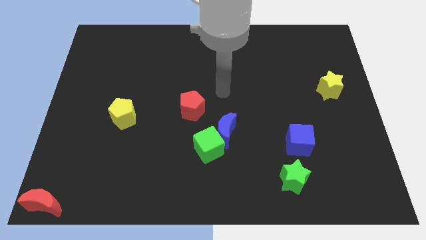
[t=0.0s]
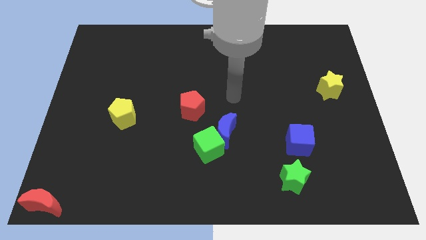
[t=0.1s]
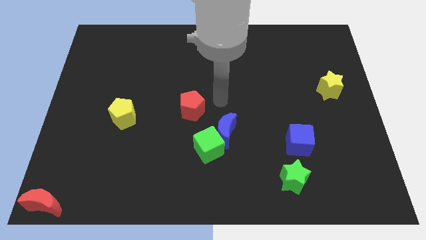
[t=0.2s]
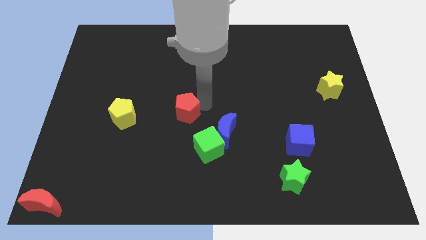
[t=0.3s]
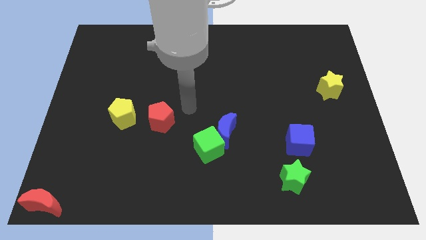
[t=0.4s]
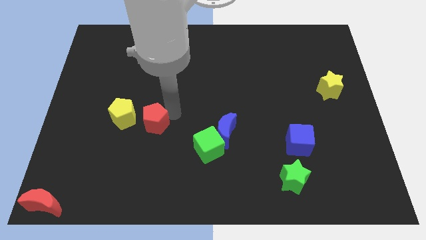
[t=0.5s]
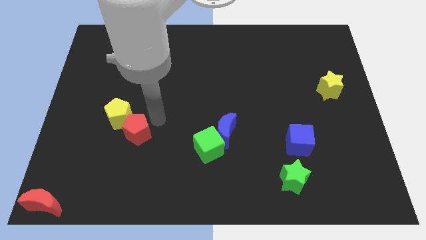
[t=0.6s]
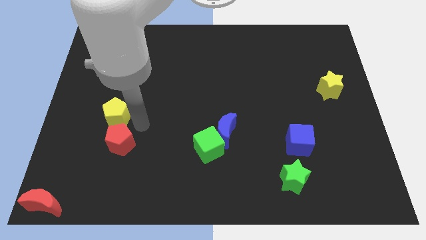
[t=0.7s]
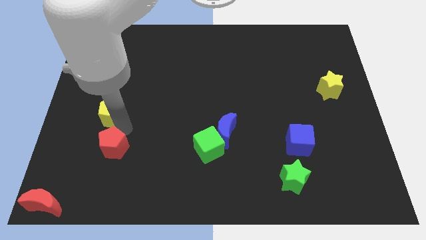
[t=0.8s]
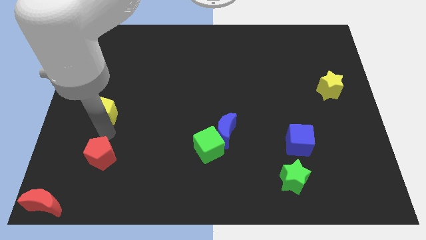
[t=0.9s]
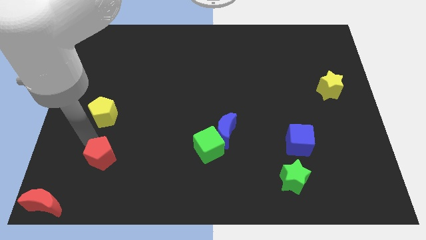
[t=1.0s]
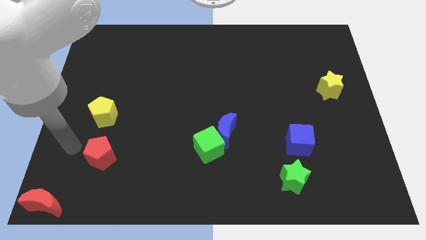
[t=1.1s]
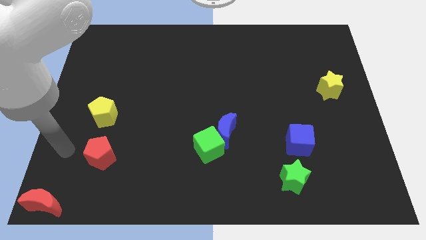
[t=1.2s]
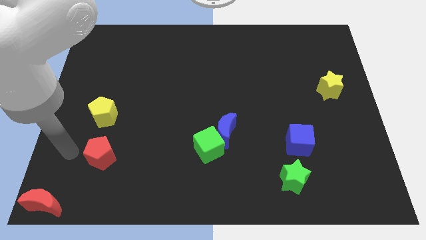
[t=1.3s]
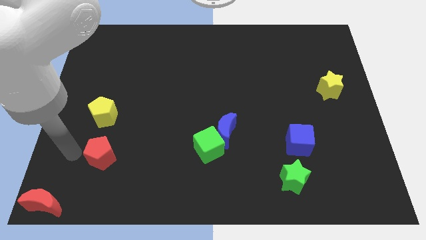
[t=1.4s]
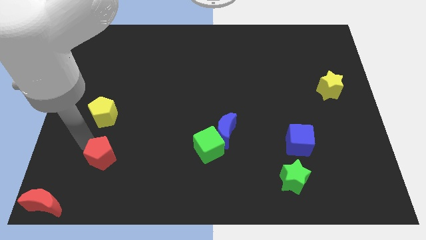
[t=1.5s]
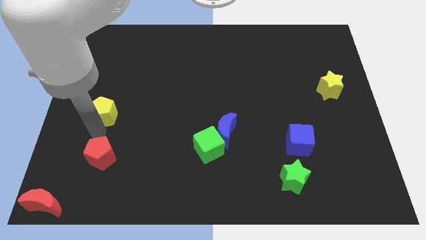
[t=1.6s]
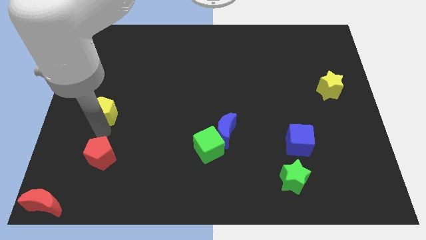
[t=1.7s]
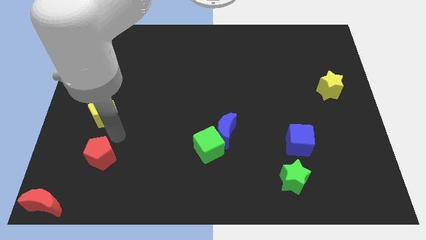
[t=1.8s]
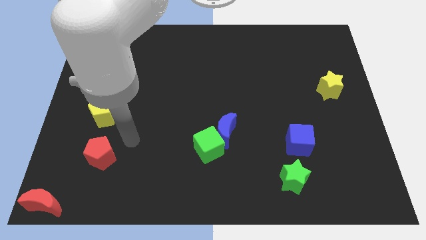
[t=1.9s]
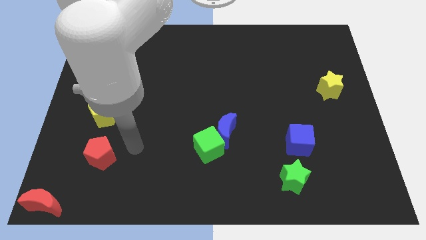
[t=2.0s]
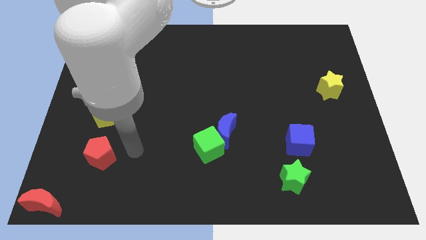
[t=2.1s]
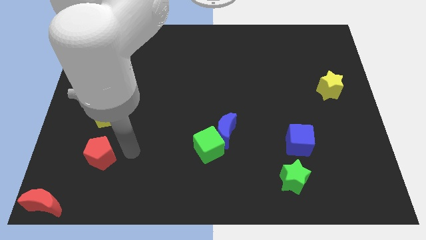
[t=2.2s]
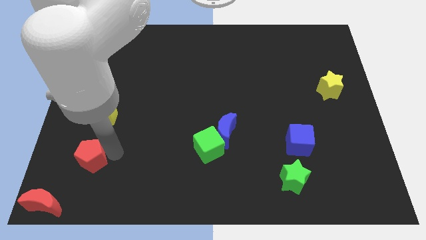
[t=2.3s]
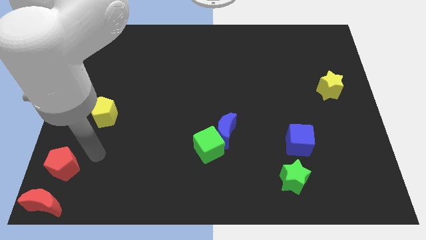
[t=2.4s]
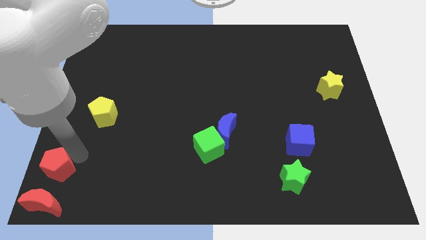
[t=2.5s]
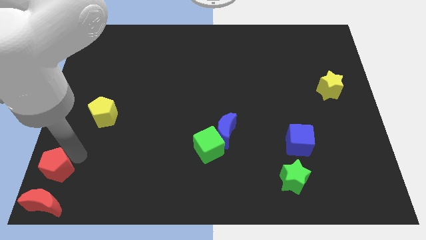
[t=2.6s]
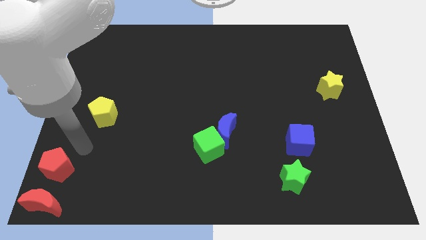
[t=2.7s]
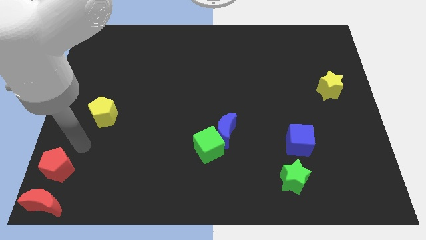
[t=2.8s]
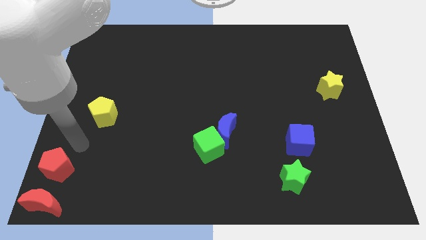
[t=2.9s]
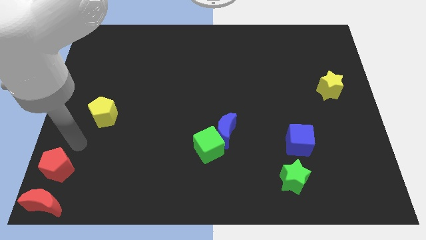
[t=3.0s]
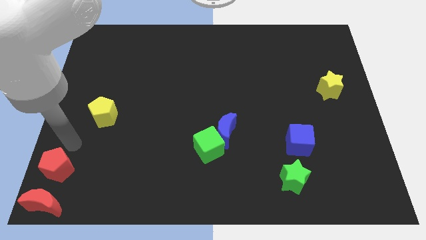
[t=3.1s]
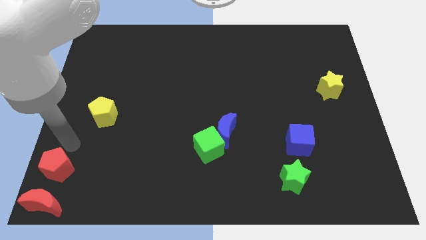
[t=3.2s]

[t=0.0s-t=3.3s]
put the red pentagon vertically above the red moon

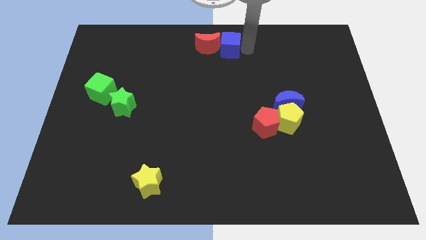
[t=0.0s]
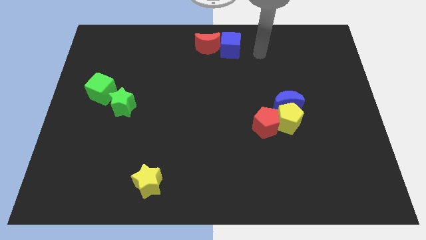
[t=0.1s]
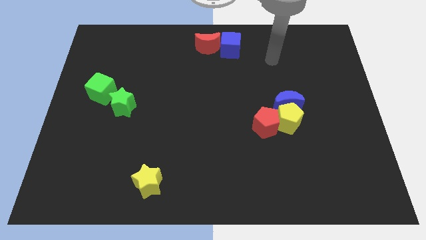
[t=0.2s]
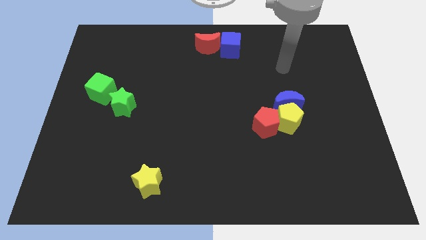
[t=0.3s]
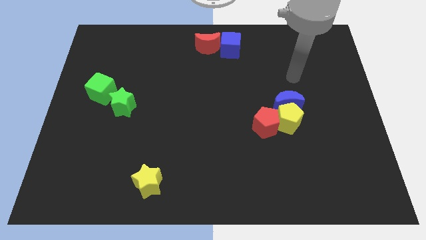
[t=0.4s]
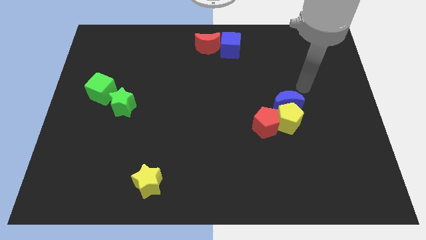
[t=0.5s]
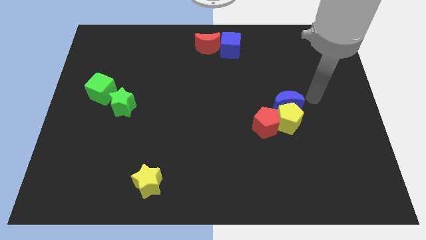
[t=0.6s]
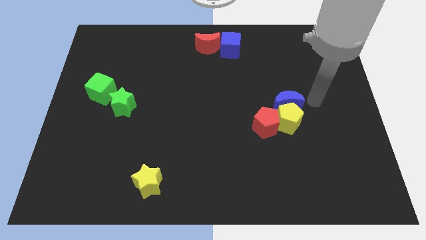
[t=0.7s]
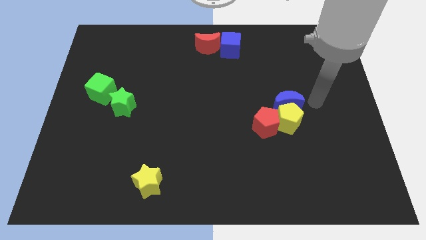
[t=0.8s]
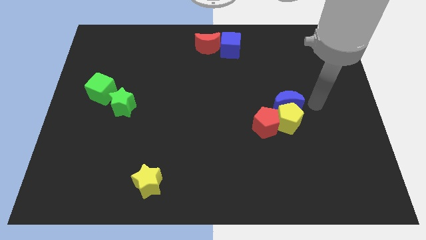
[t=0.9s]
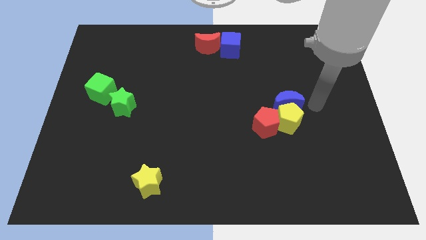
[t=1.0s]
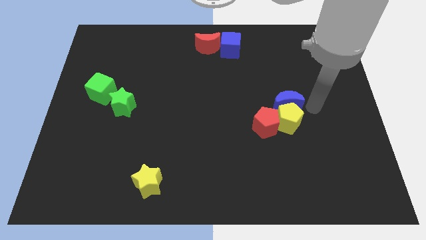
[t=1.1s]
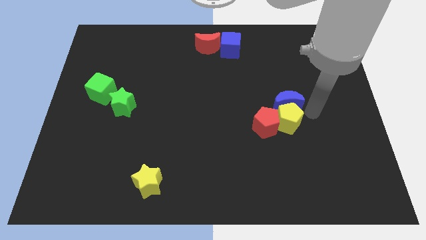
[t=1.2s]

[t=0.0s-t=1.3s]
take your hand away from the blue cube

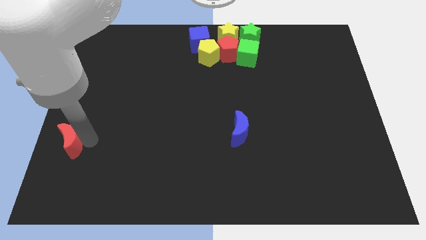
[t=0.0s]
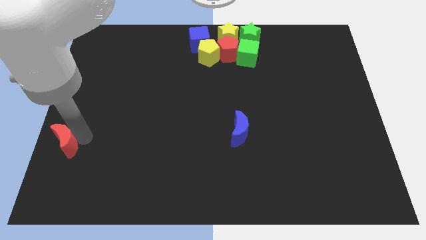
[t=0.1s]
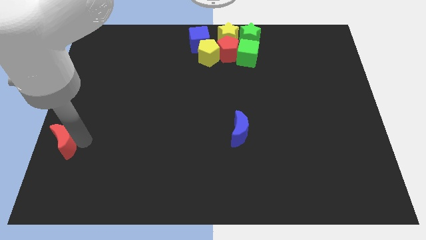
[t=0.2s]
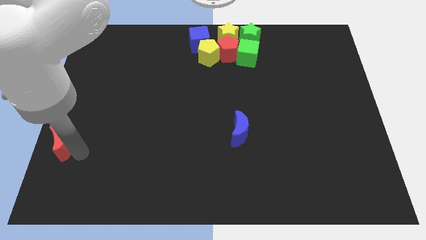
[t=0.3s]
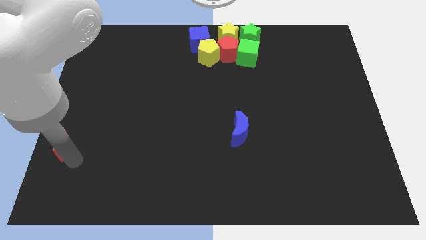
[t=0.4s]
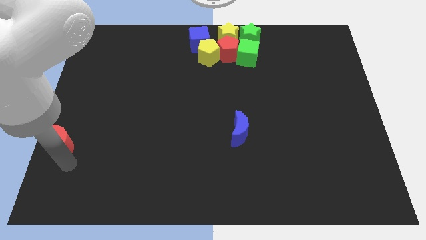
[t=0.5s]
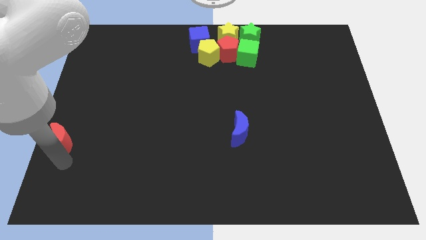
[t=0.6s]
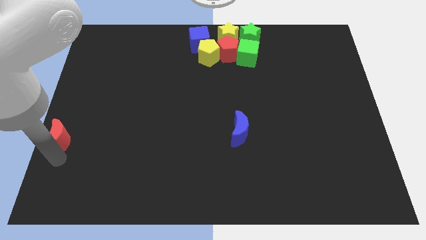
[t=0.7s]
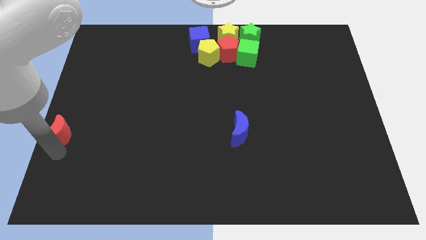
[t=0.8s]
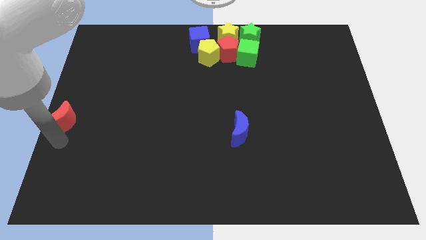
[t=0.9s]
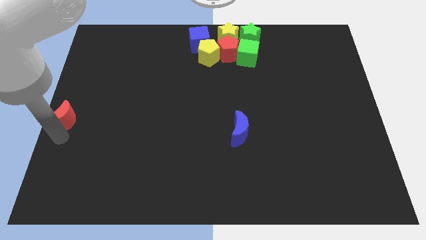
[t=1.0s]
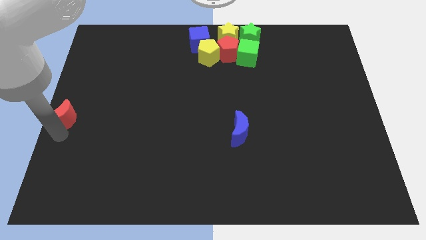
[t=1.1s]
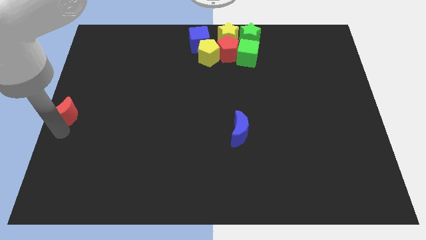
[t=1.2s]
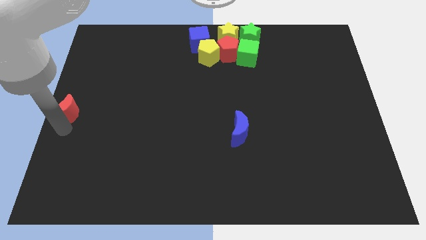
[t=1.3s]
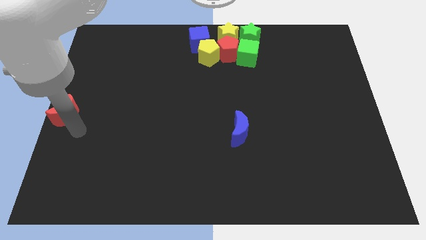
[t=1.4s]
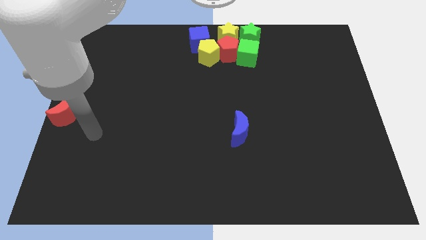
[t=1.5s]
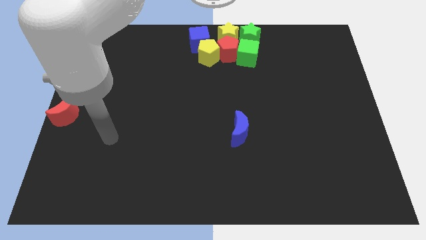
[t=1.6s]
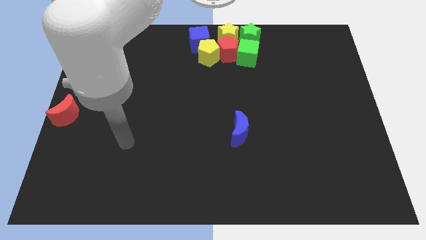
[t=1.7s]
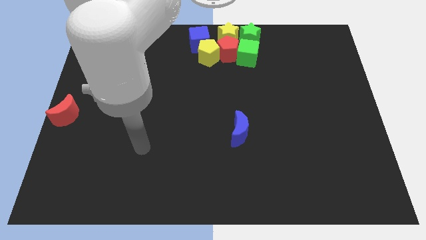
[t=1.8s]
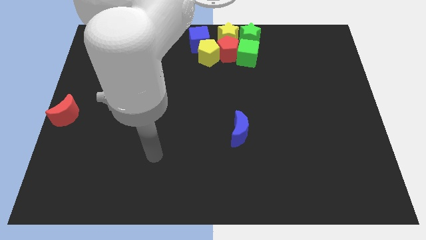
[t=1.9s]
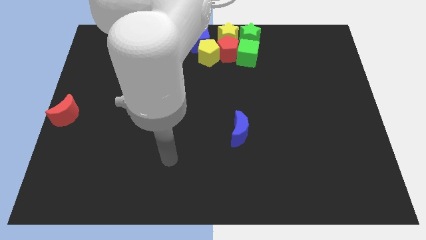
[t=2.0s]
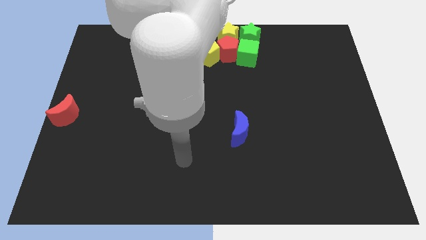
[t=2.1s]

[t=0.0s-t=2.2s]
place the red moon to the left center of the board

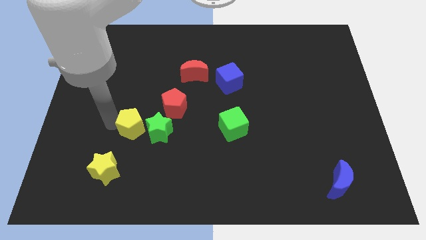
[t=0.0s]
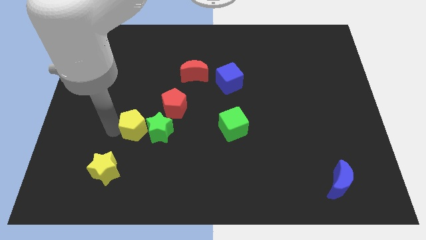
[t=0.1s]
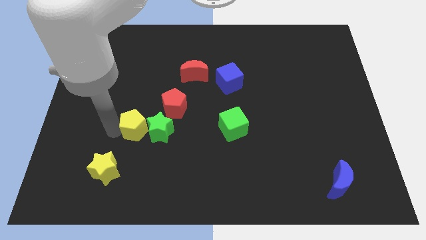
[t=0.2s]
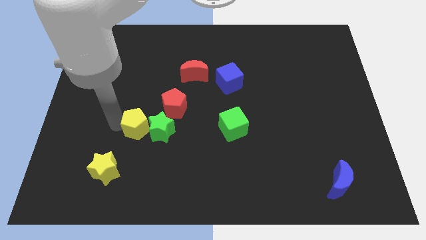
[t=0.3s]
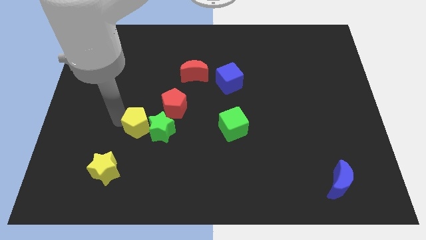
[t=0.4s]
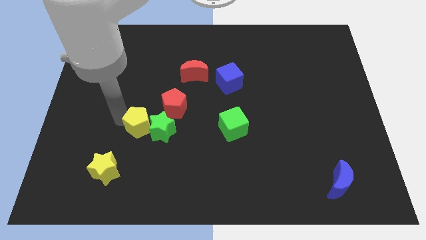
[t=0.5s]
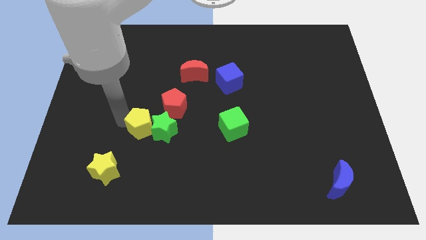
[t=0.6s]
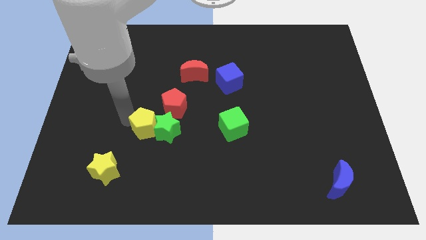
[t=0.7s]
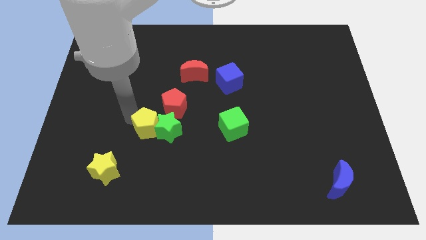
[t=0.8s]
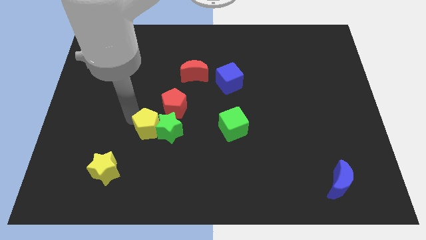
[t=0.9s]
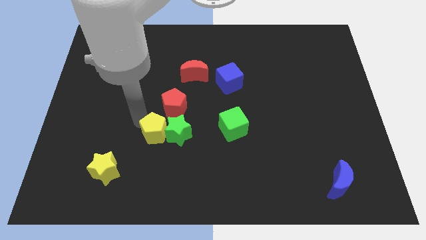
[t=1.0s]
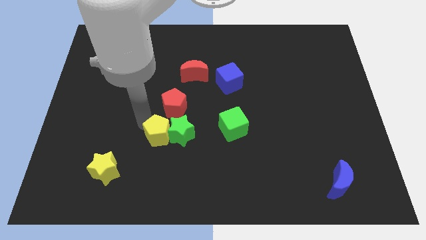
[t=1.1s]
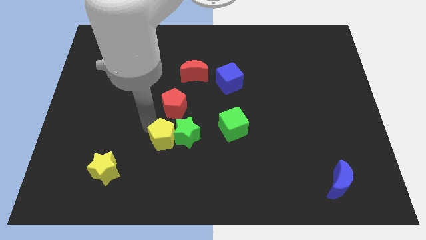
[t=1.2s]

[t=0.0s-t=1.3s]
push the yellow pentagon with the green star slightly to the right

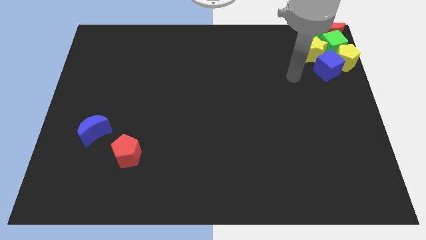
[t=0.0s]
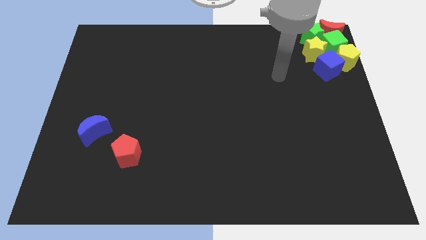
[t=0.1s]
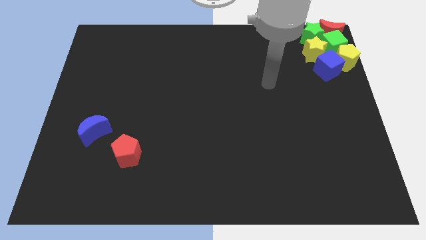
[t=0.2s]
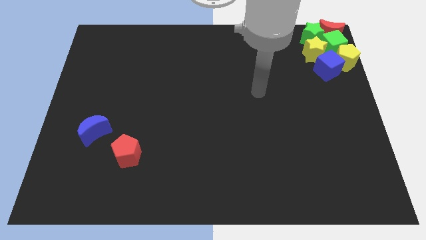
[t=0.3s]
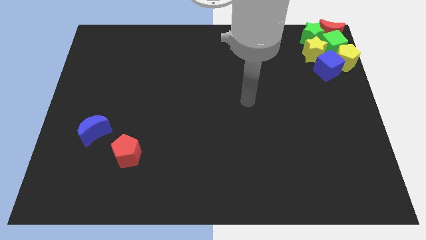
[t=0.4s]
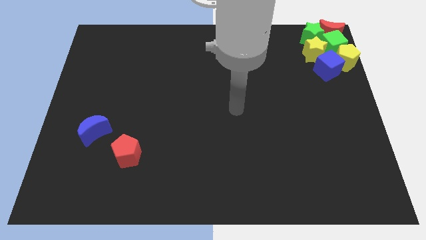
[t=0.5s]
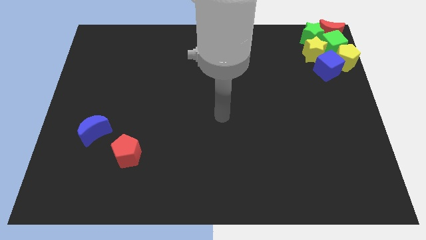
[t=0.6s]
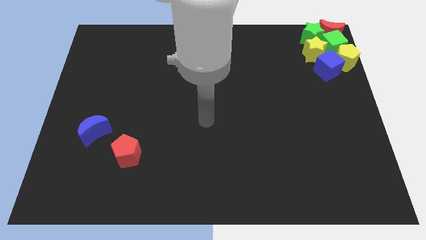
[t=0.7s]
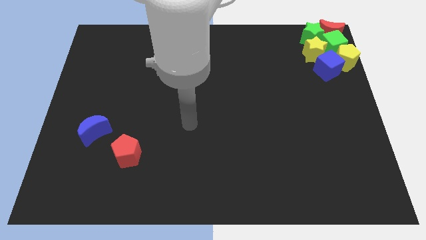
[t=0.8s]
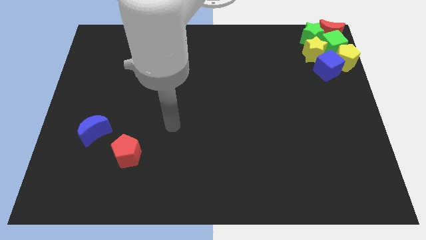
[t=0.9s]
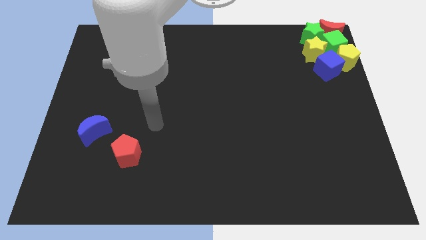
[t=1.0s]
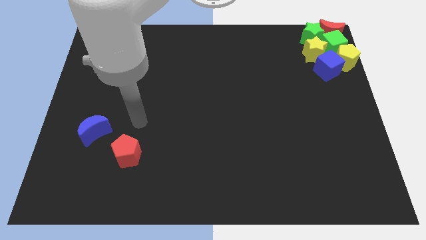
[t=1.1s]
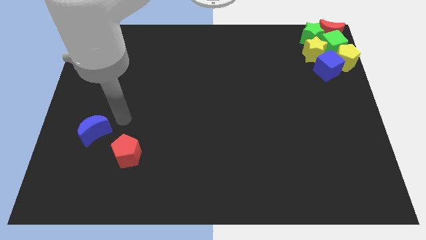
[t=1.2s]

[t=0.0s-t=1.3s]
move your hand to the right of the blue crescent
